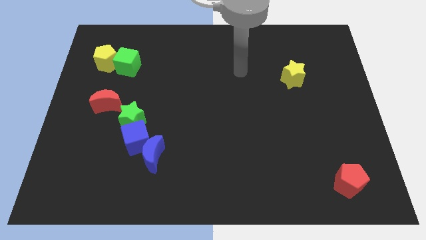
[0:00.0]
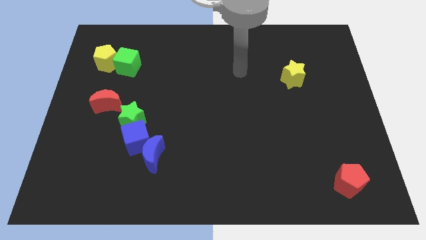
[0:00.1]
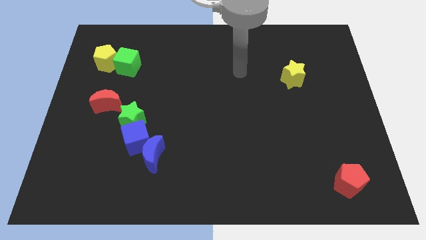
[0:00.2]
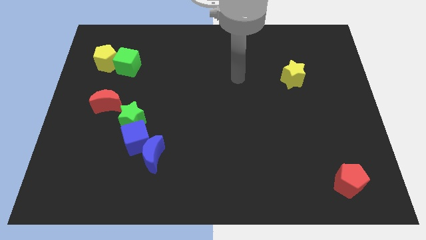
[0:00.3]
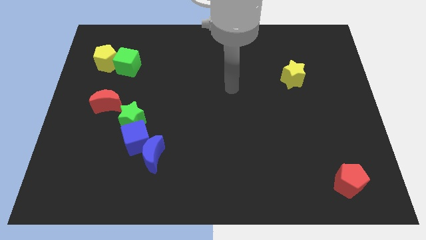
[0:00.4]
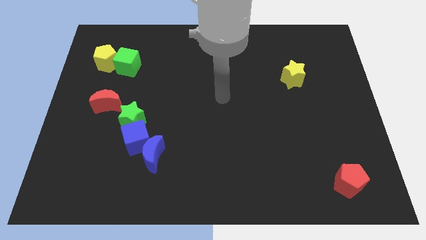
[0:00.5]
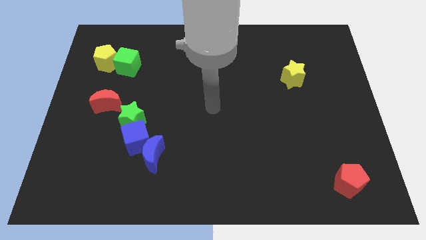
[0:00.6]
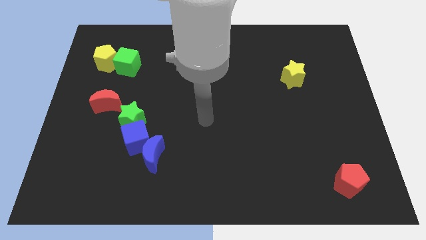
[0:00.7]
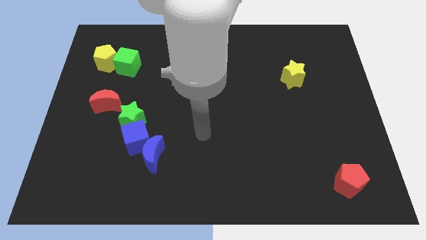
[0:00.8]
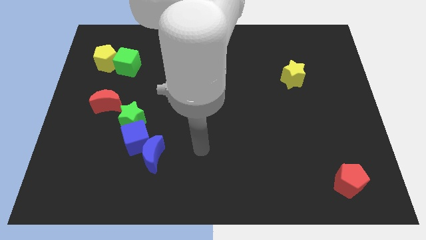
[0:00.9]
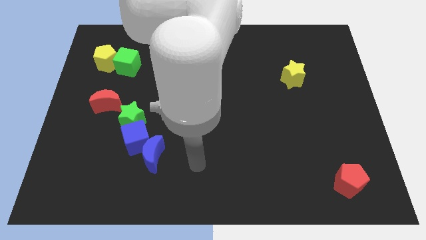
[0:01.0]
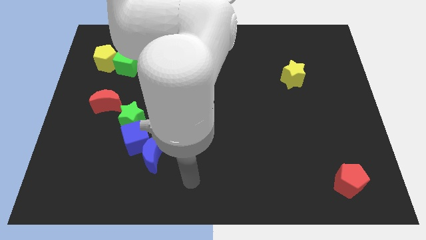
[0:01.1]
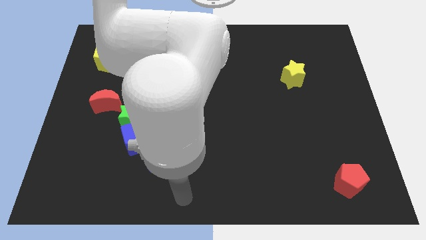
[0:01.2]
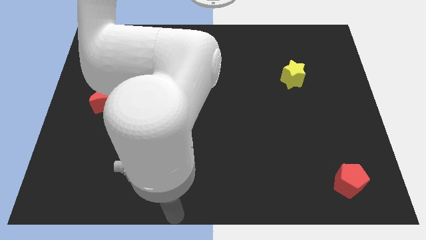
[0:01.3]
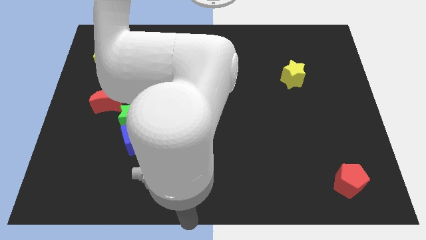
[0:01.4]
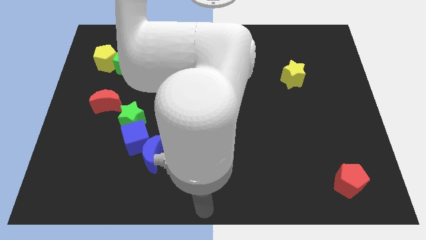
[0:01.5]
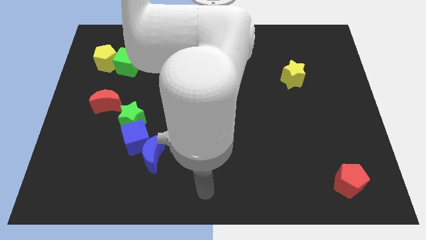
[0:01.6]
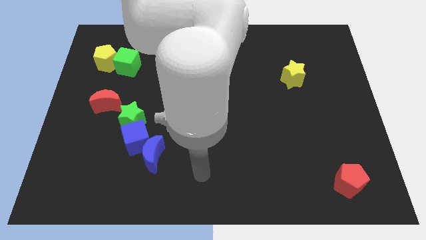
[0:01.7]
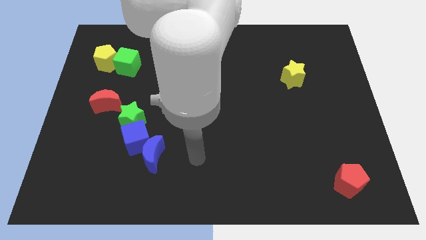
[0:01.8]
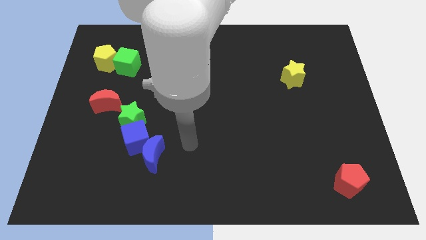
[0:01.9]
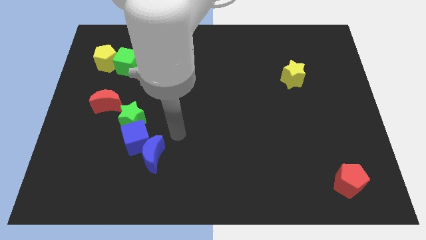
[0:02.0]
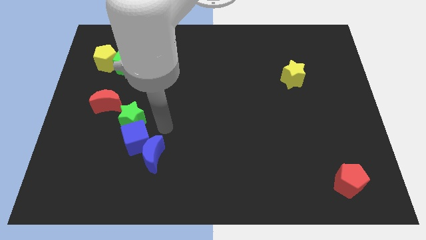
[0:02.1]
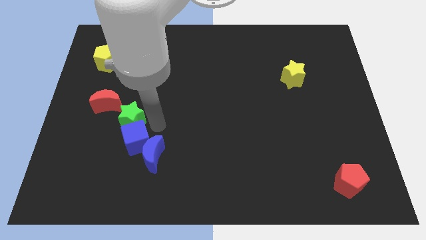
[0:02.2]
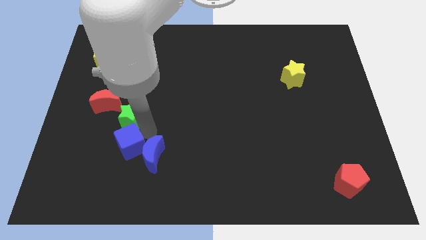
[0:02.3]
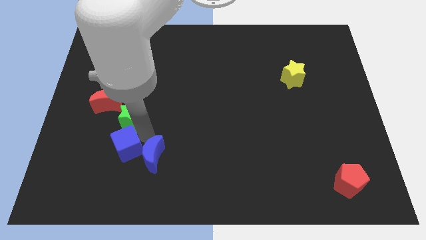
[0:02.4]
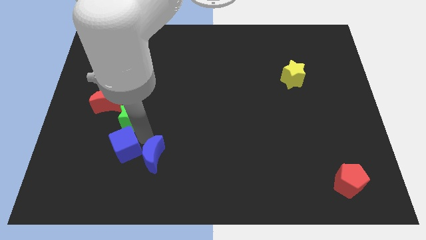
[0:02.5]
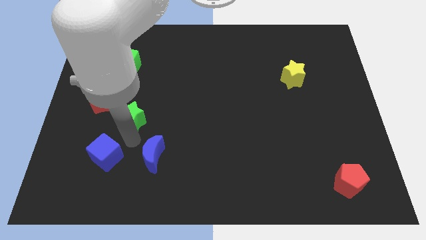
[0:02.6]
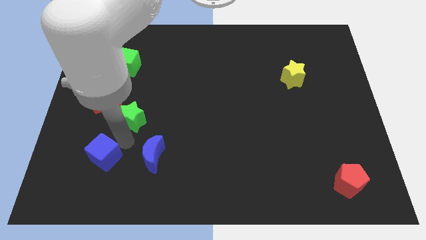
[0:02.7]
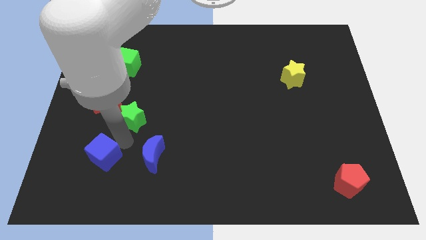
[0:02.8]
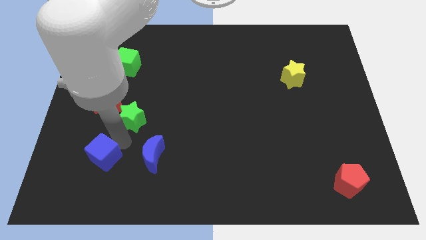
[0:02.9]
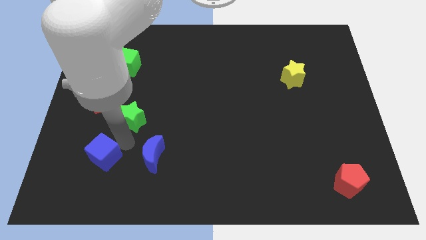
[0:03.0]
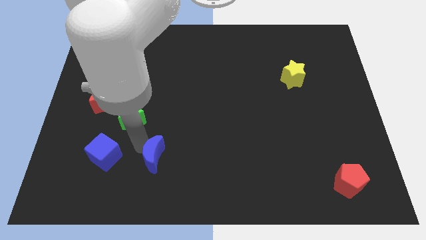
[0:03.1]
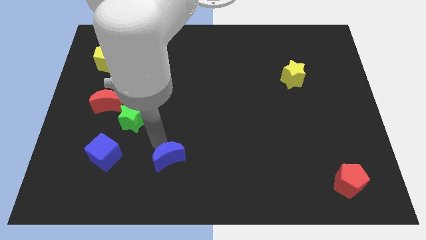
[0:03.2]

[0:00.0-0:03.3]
place the blue cube left to the blue moon

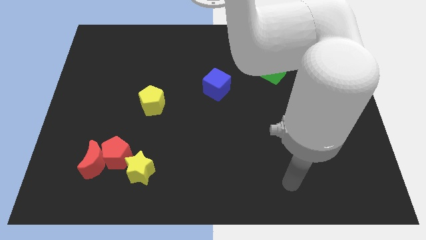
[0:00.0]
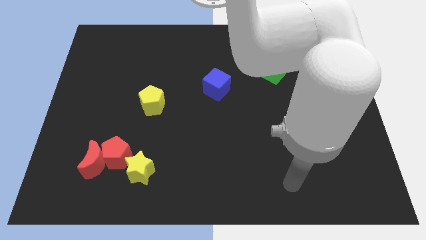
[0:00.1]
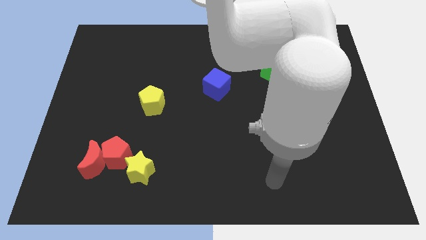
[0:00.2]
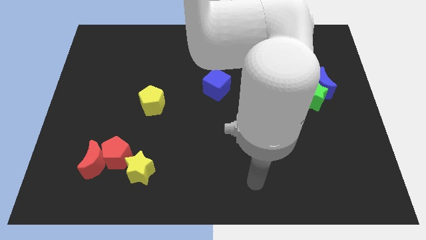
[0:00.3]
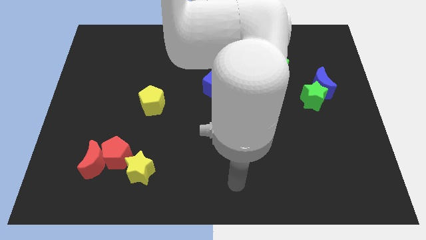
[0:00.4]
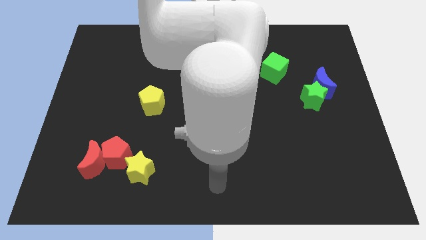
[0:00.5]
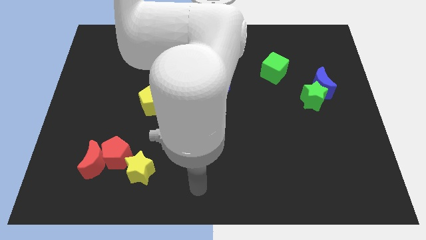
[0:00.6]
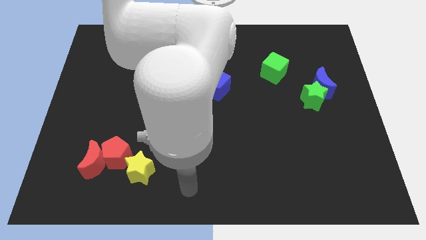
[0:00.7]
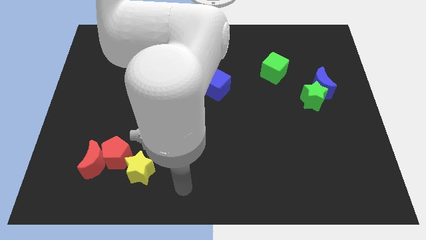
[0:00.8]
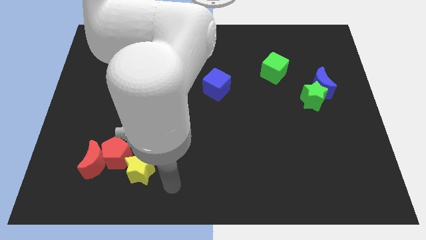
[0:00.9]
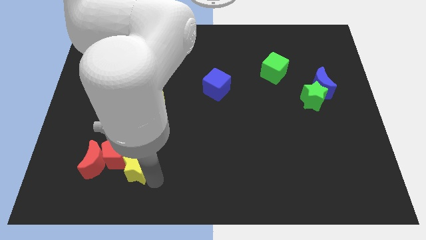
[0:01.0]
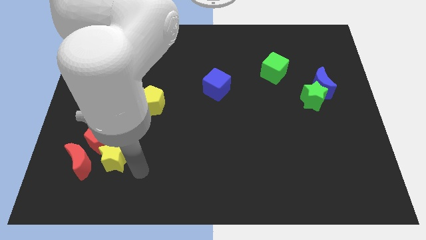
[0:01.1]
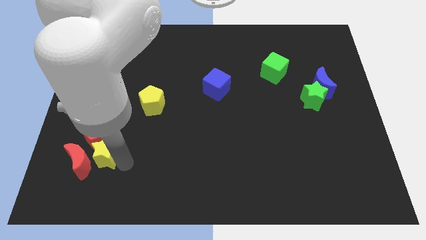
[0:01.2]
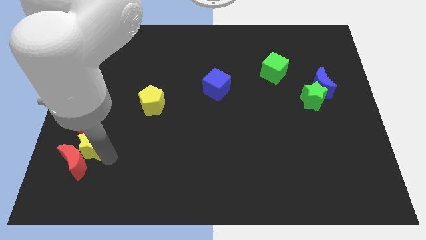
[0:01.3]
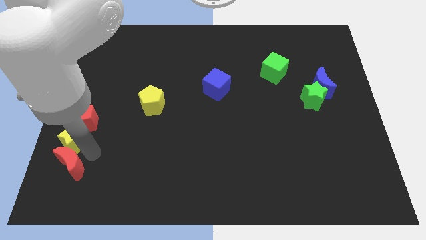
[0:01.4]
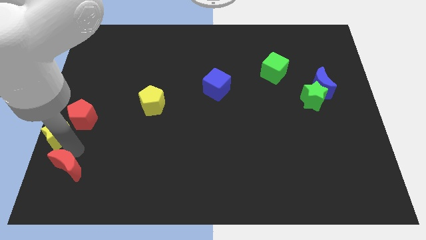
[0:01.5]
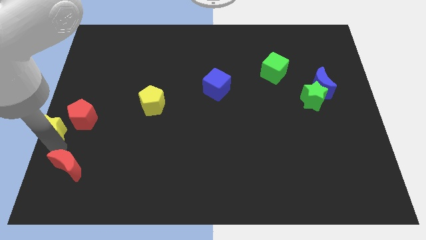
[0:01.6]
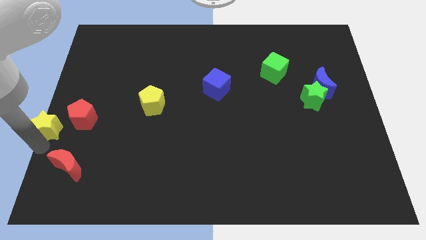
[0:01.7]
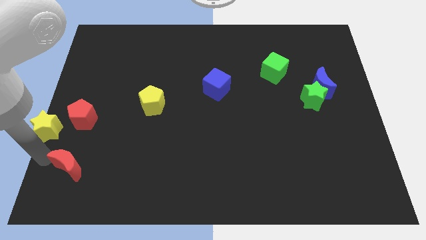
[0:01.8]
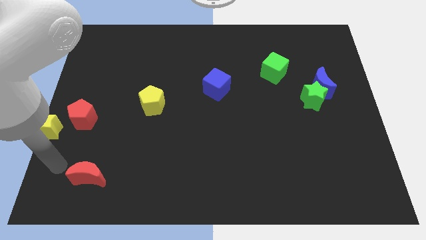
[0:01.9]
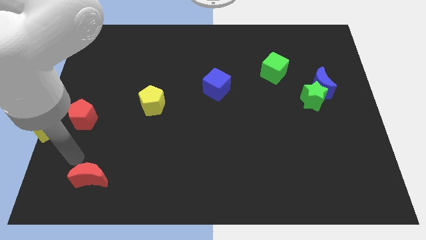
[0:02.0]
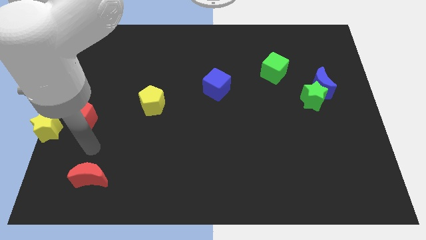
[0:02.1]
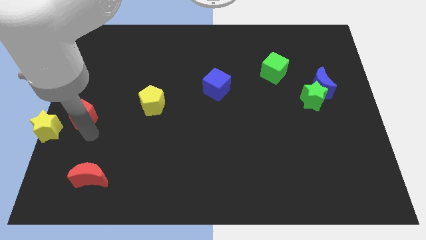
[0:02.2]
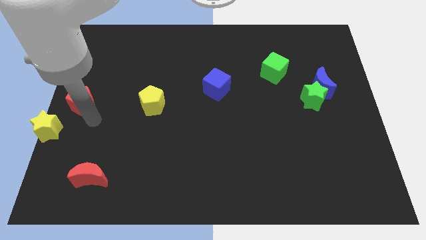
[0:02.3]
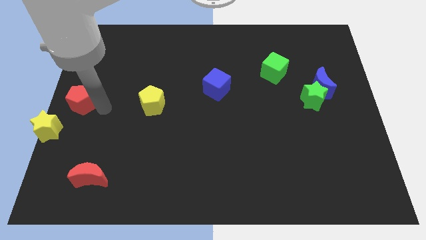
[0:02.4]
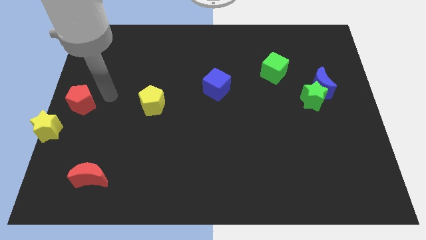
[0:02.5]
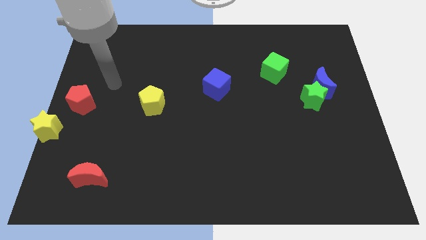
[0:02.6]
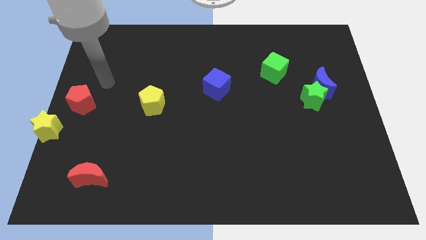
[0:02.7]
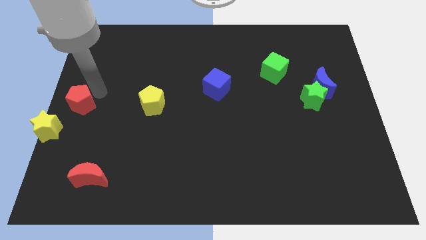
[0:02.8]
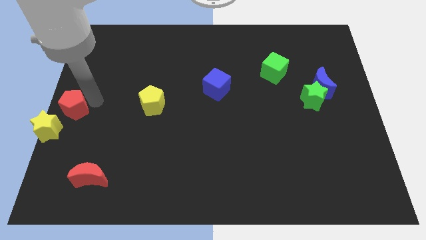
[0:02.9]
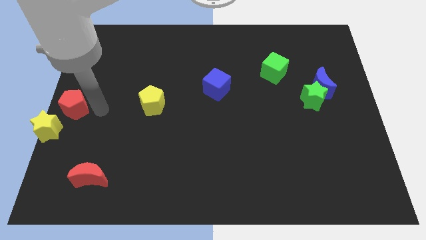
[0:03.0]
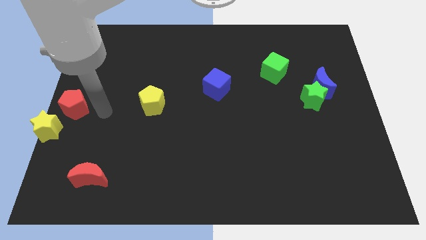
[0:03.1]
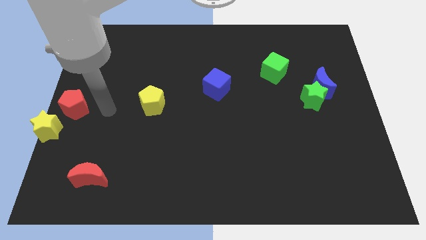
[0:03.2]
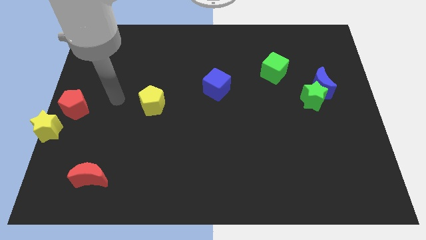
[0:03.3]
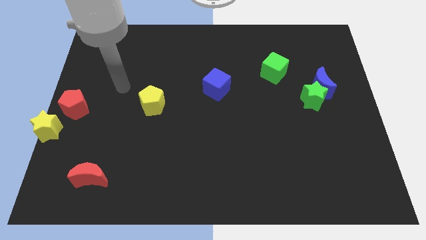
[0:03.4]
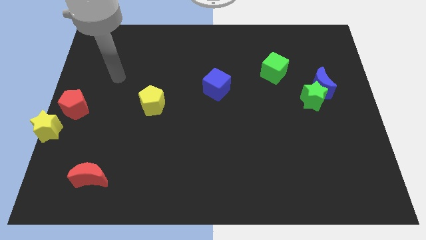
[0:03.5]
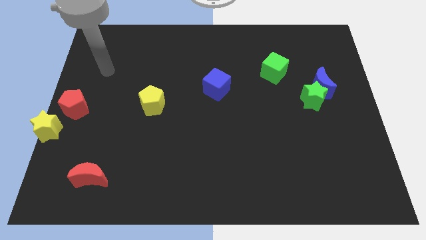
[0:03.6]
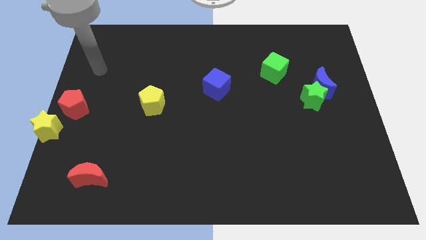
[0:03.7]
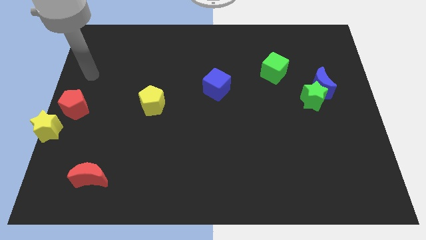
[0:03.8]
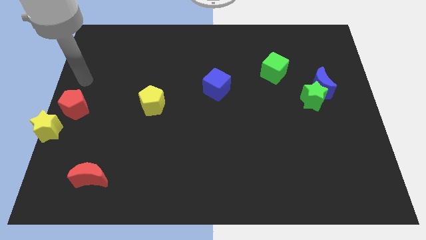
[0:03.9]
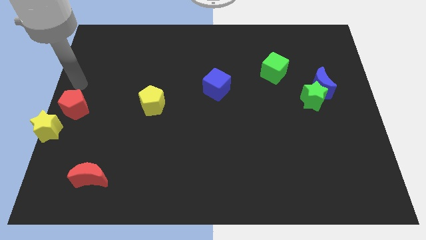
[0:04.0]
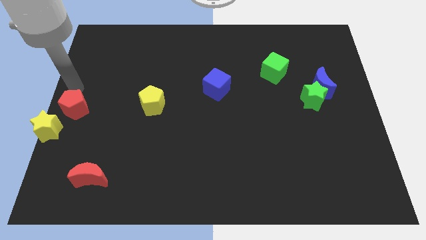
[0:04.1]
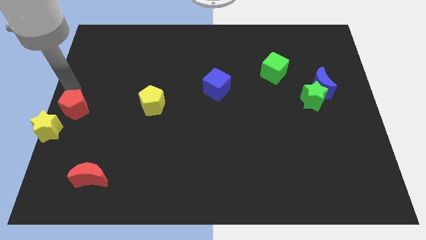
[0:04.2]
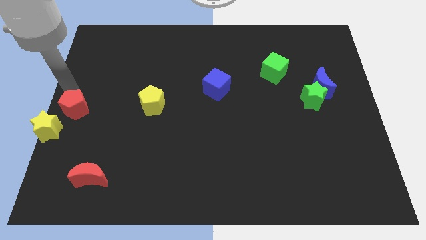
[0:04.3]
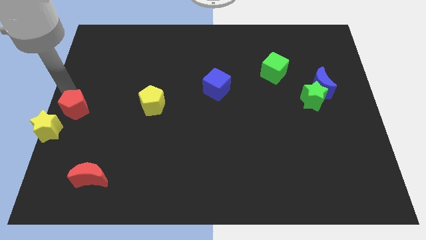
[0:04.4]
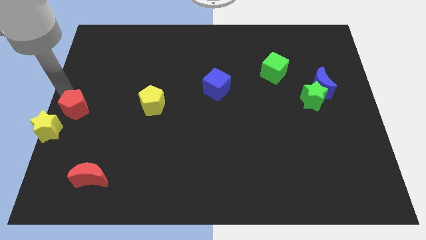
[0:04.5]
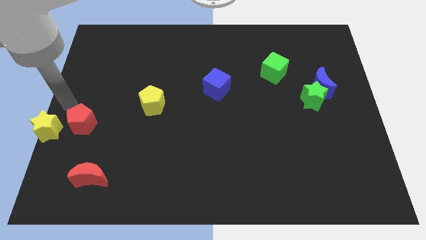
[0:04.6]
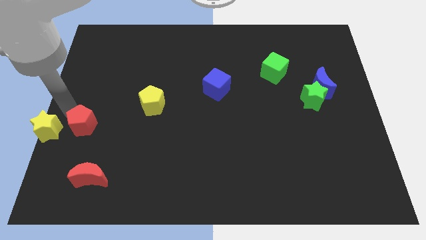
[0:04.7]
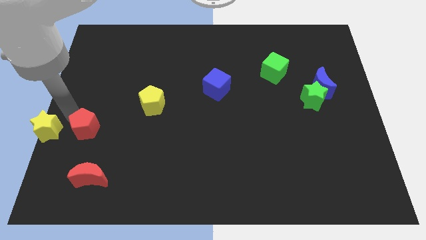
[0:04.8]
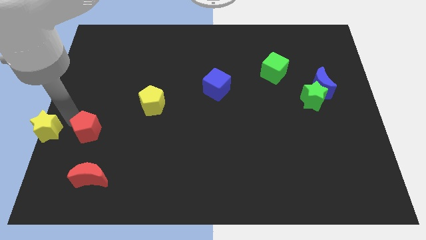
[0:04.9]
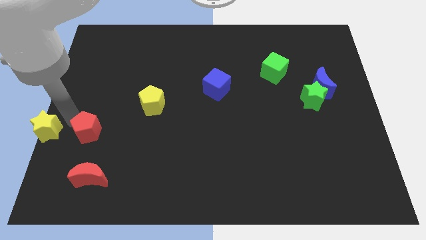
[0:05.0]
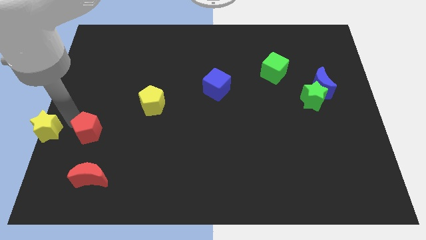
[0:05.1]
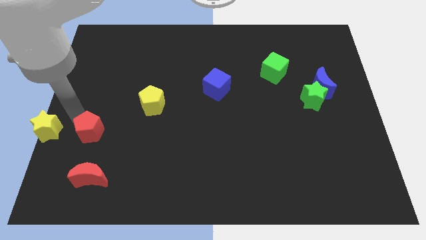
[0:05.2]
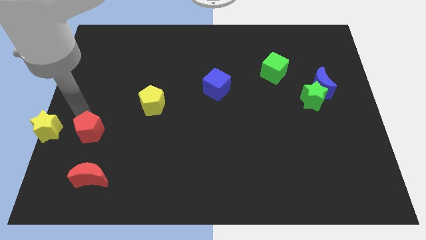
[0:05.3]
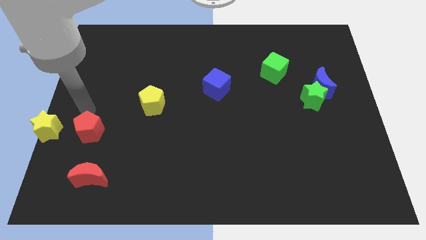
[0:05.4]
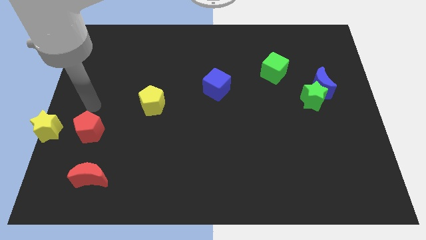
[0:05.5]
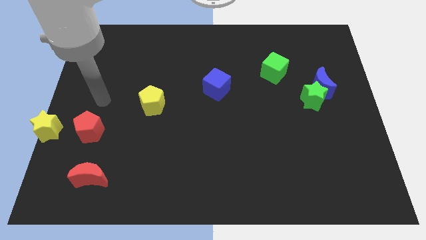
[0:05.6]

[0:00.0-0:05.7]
put the yellow star and red pentagon in a line horizontally

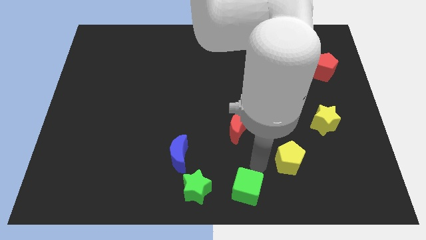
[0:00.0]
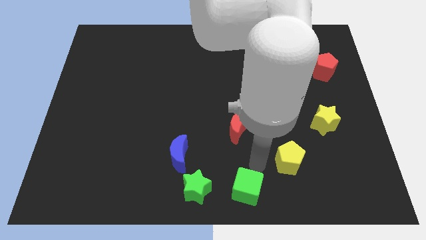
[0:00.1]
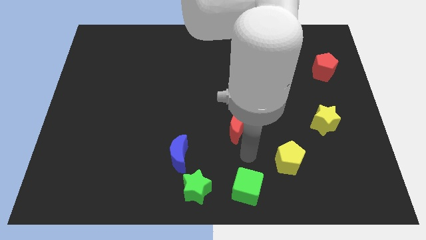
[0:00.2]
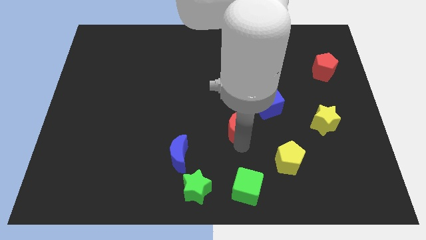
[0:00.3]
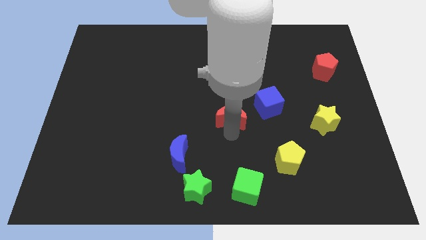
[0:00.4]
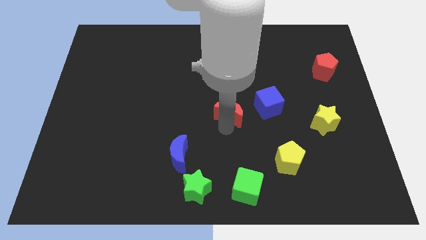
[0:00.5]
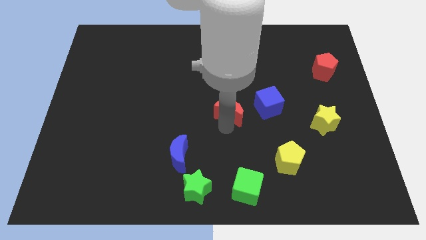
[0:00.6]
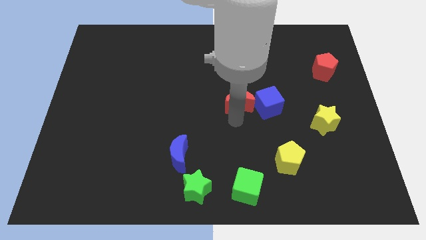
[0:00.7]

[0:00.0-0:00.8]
place the red moon to the left of blue cube
